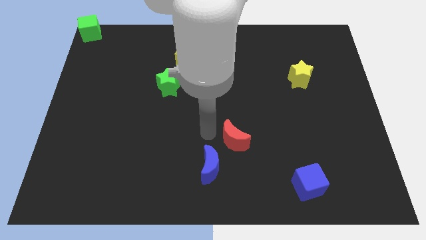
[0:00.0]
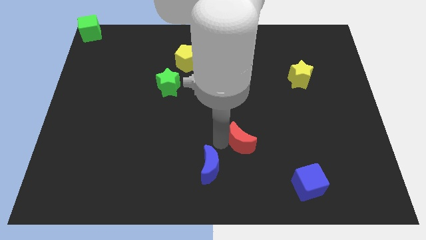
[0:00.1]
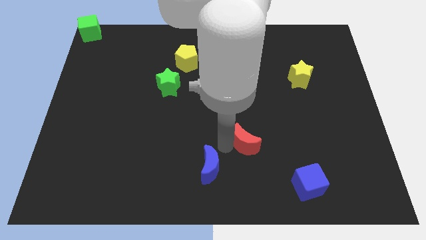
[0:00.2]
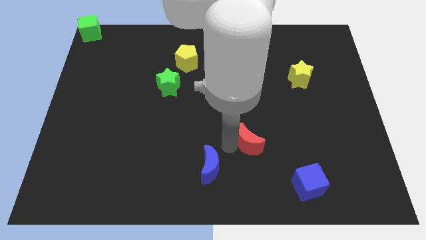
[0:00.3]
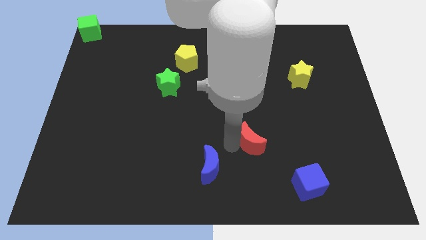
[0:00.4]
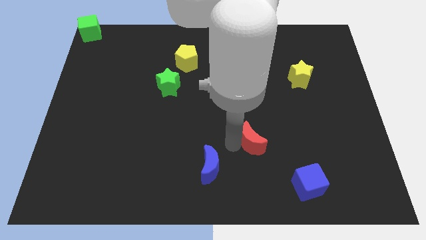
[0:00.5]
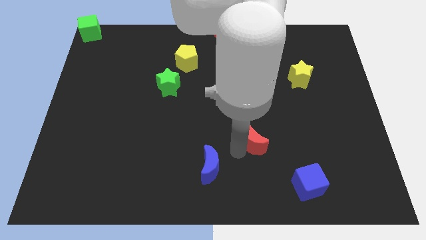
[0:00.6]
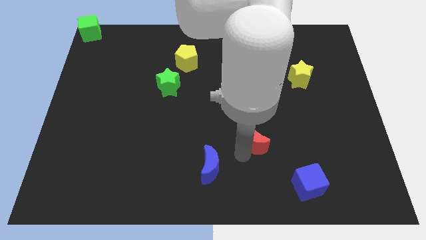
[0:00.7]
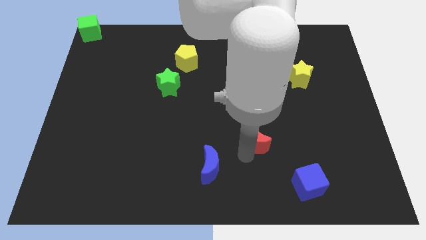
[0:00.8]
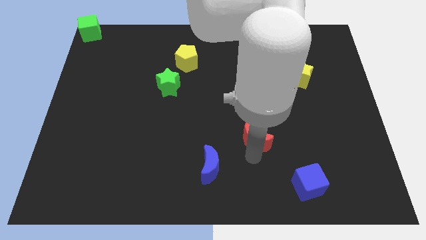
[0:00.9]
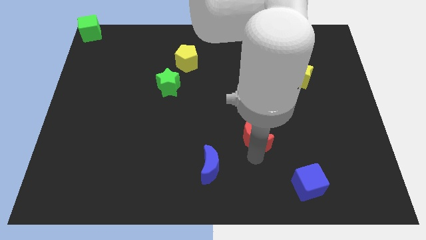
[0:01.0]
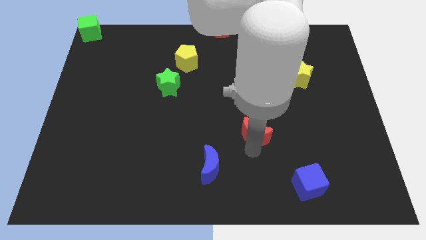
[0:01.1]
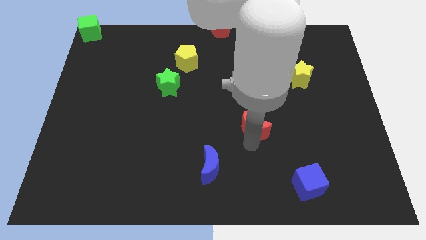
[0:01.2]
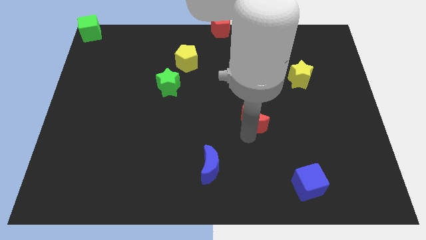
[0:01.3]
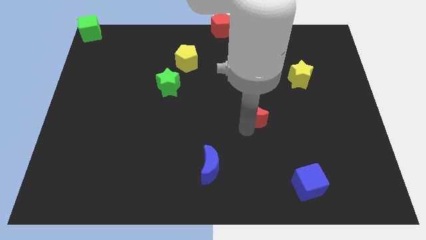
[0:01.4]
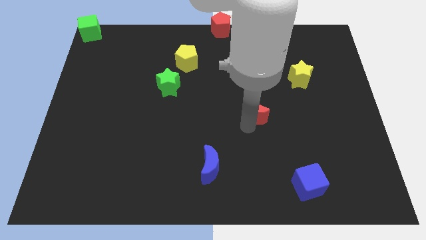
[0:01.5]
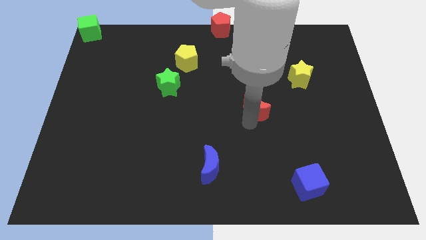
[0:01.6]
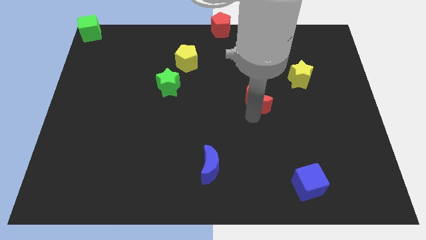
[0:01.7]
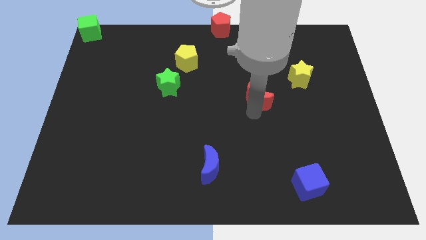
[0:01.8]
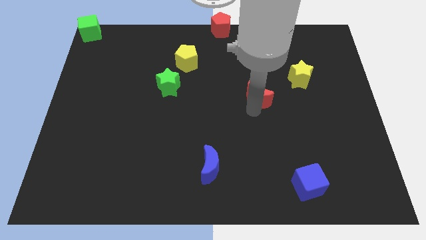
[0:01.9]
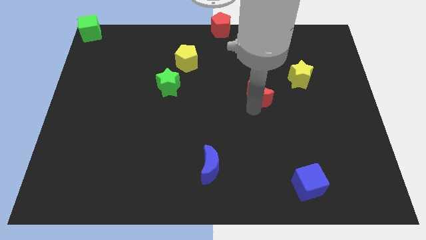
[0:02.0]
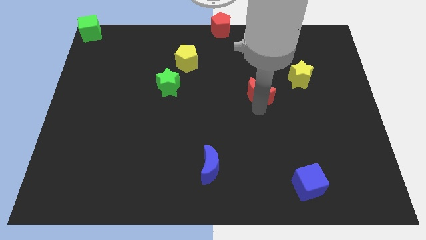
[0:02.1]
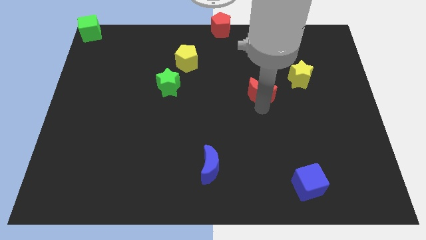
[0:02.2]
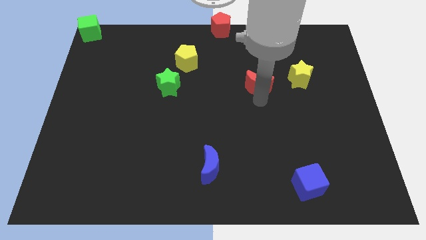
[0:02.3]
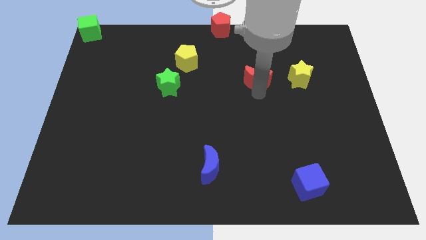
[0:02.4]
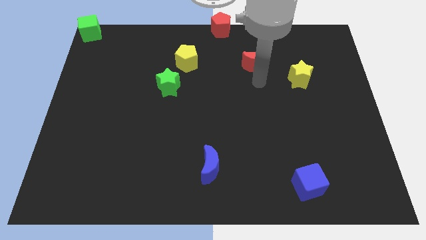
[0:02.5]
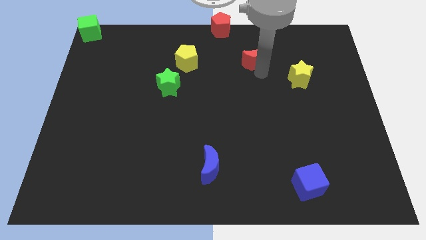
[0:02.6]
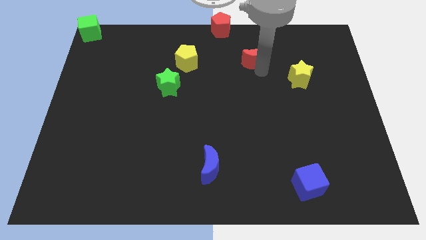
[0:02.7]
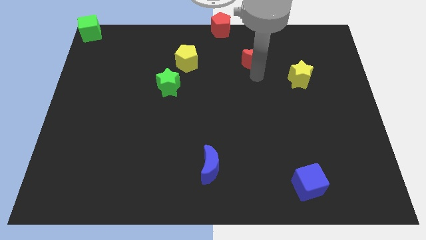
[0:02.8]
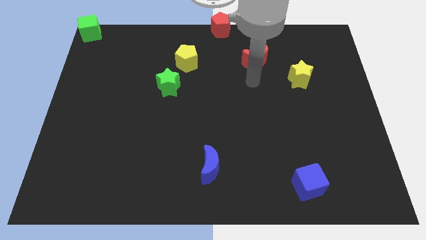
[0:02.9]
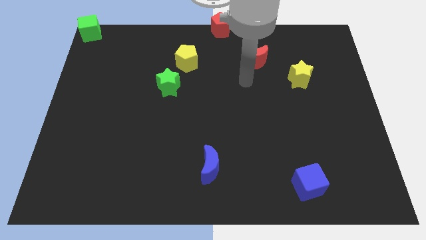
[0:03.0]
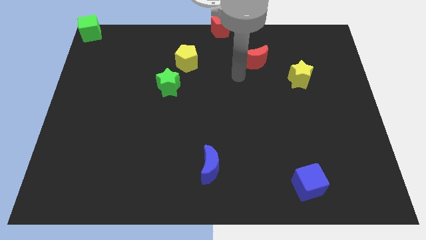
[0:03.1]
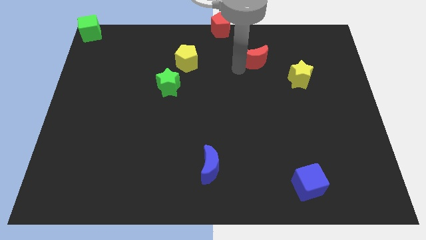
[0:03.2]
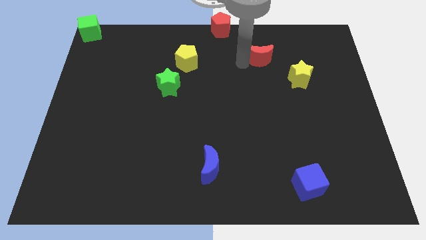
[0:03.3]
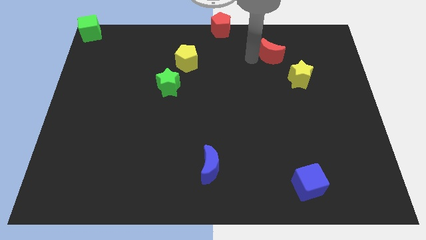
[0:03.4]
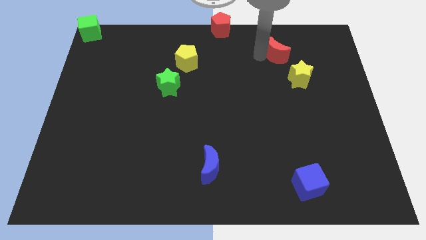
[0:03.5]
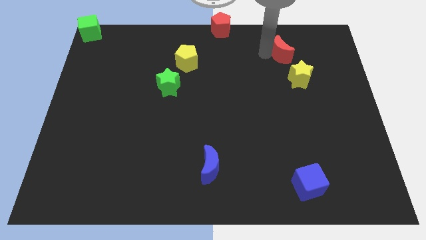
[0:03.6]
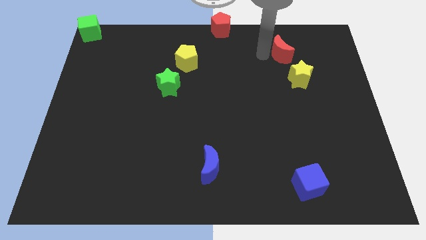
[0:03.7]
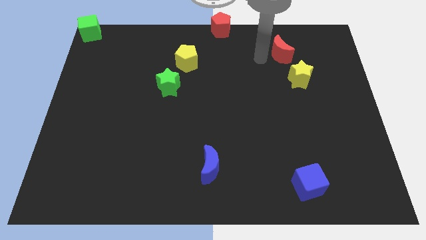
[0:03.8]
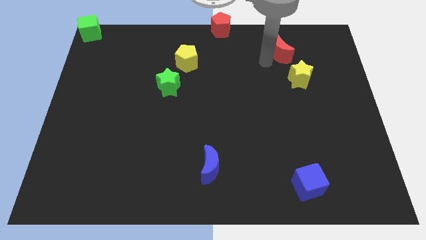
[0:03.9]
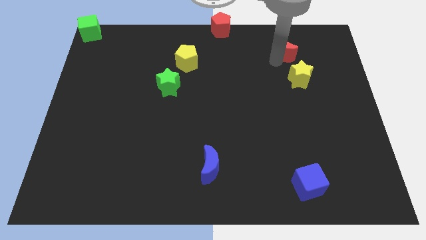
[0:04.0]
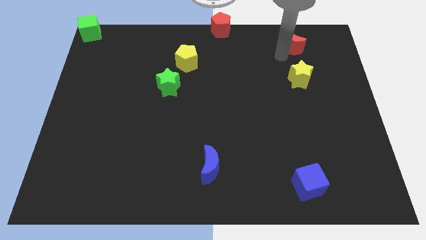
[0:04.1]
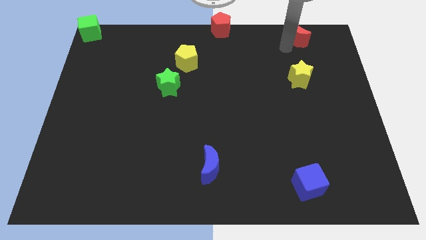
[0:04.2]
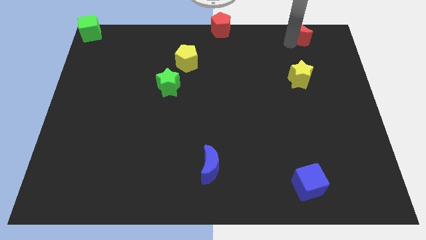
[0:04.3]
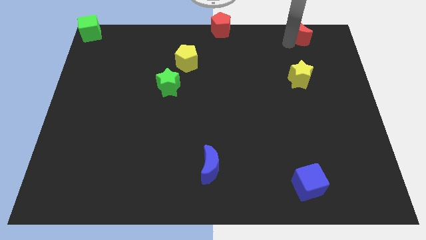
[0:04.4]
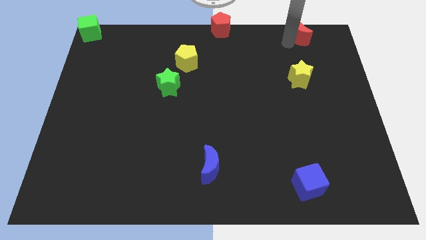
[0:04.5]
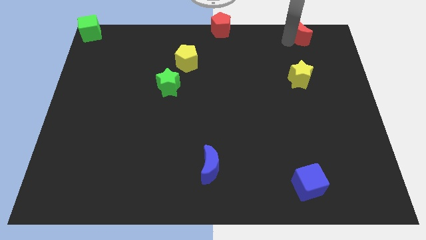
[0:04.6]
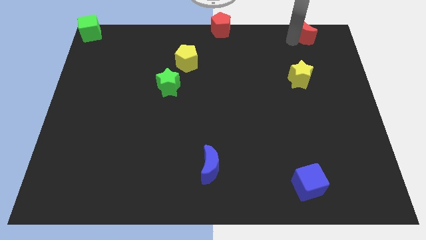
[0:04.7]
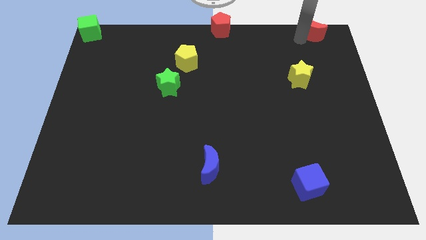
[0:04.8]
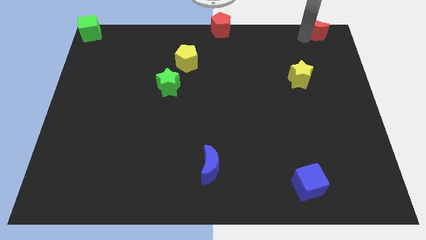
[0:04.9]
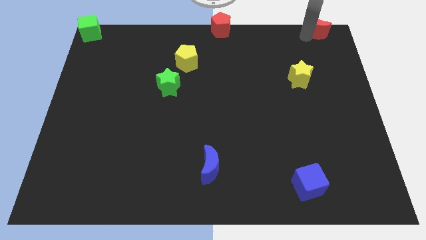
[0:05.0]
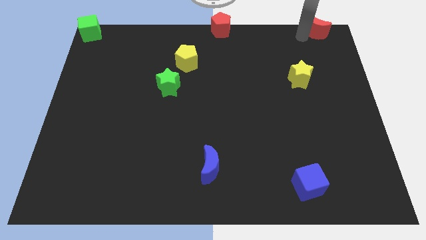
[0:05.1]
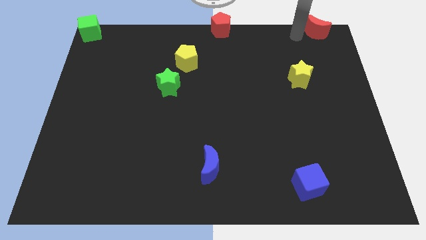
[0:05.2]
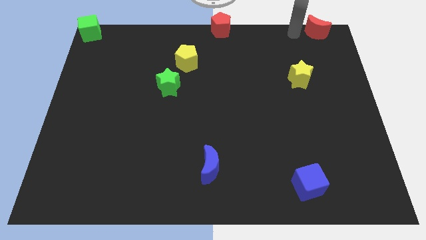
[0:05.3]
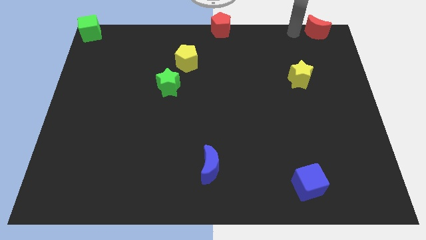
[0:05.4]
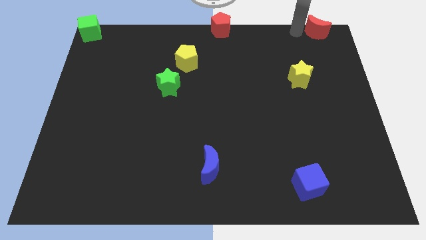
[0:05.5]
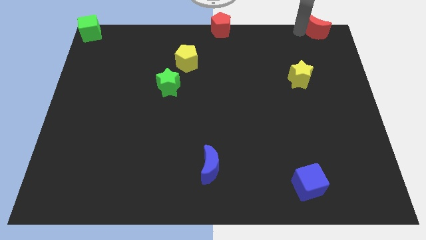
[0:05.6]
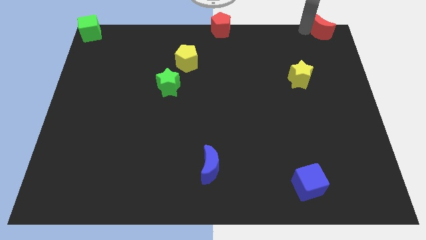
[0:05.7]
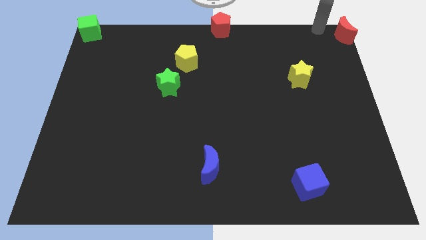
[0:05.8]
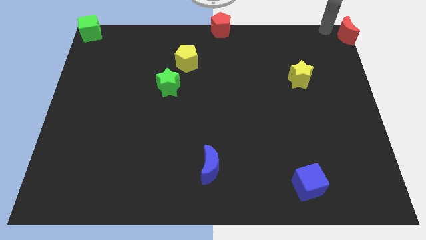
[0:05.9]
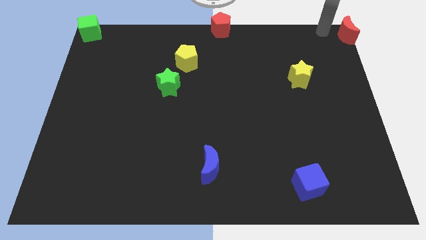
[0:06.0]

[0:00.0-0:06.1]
place the red crescent to top right of the board

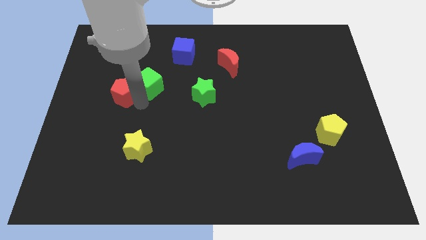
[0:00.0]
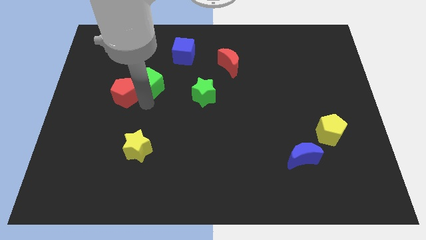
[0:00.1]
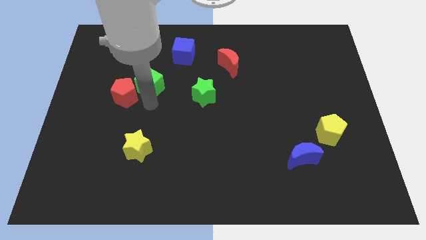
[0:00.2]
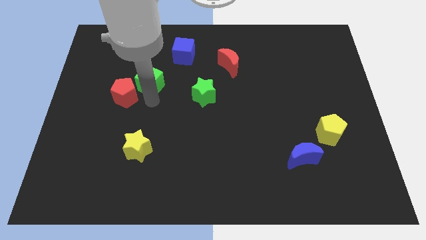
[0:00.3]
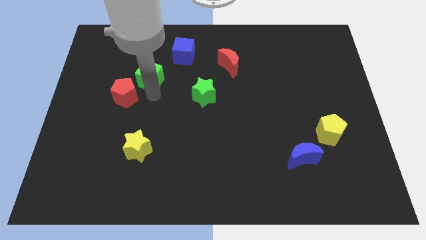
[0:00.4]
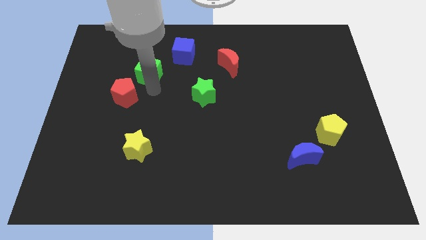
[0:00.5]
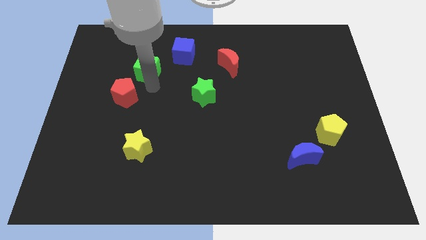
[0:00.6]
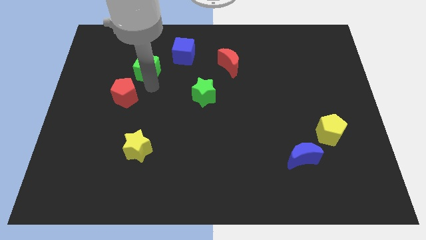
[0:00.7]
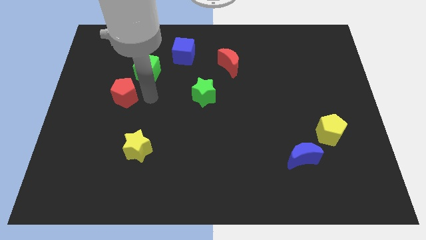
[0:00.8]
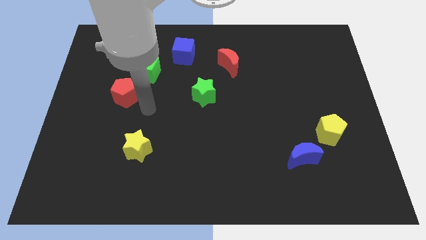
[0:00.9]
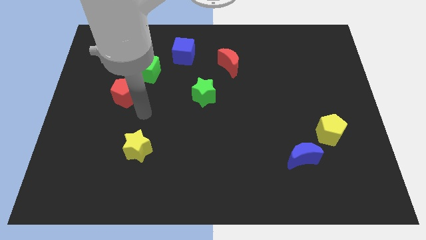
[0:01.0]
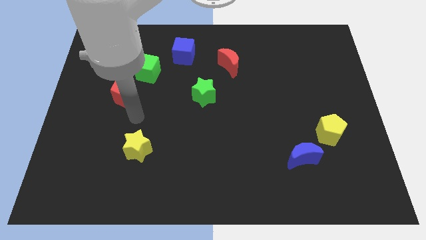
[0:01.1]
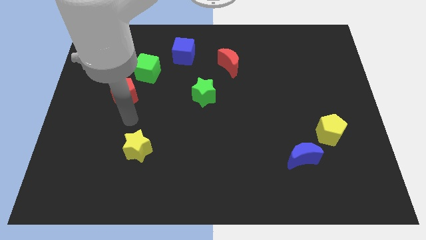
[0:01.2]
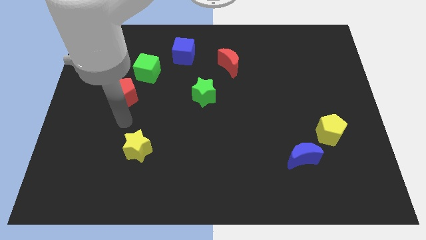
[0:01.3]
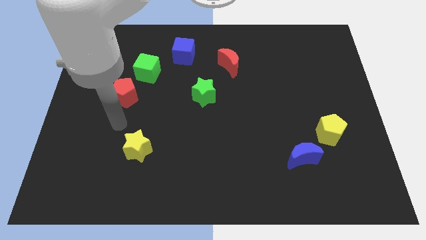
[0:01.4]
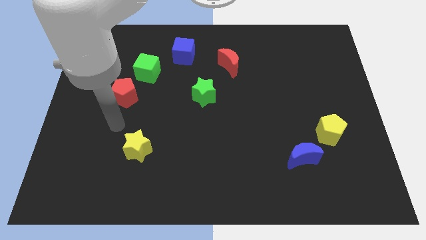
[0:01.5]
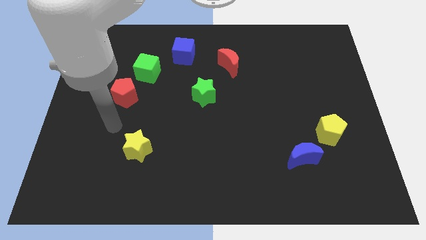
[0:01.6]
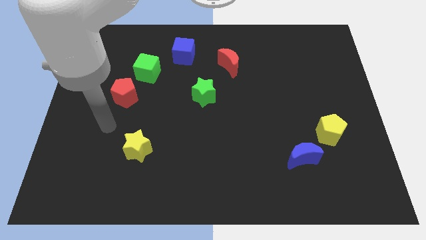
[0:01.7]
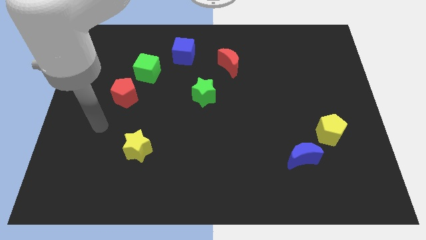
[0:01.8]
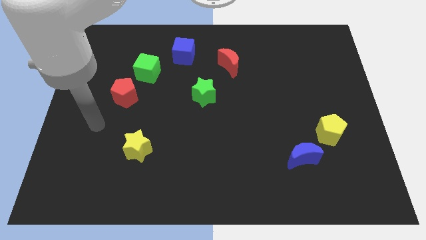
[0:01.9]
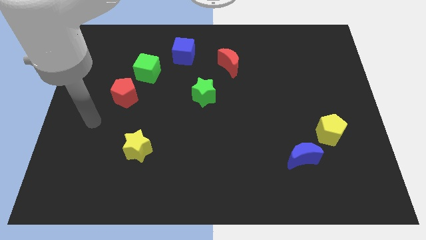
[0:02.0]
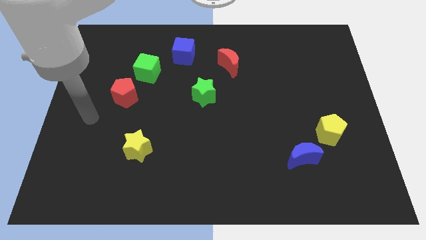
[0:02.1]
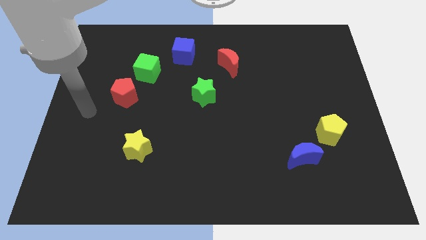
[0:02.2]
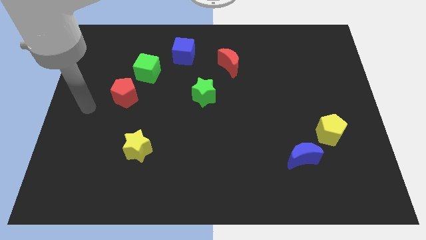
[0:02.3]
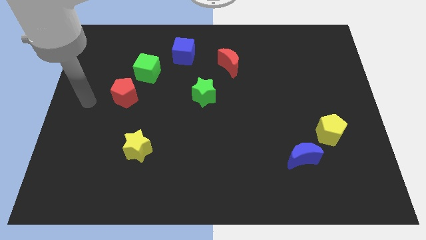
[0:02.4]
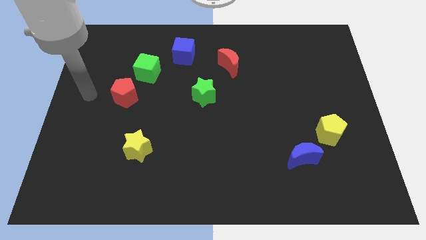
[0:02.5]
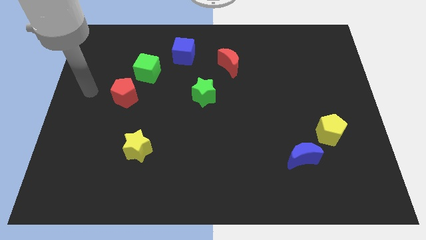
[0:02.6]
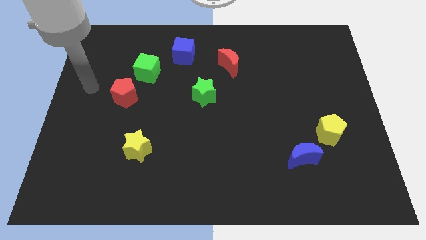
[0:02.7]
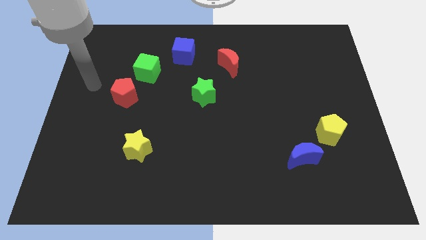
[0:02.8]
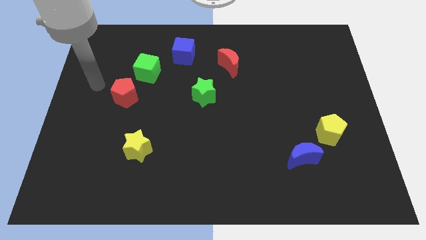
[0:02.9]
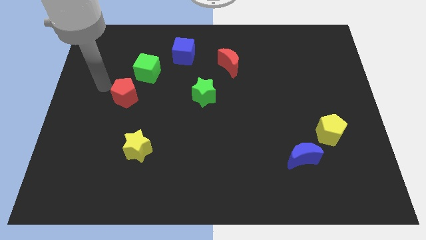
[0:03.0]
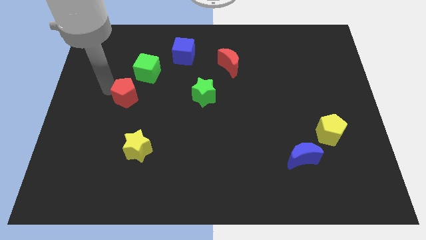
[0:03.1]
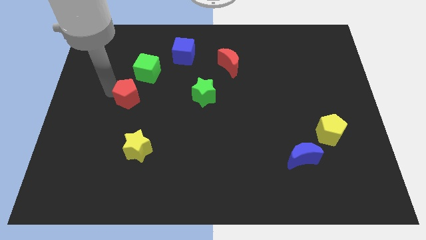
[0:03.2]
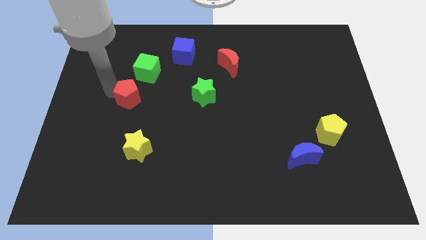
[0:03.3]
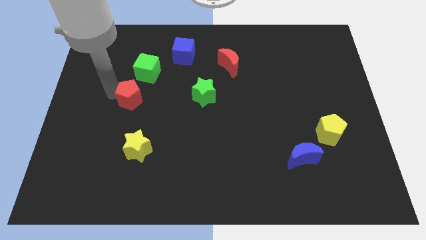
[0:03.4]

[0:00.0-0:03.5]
move your arm towards the red pentagon
